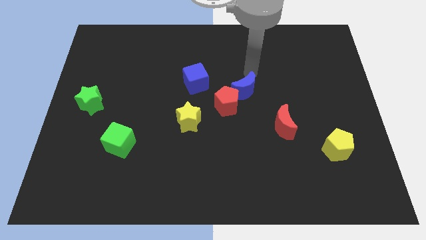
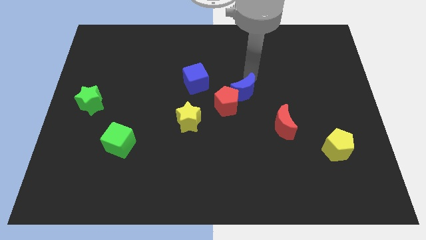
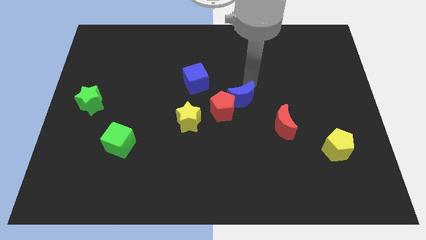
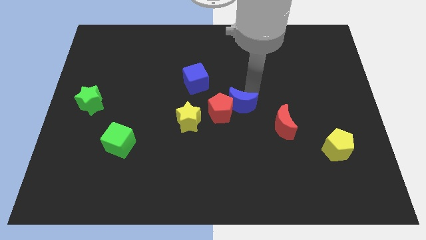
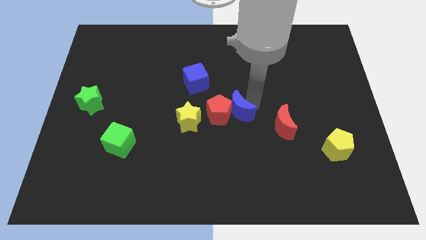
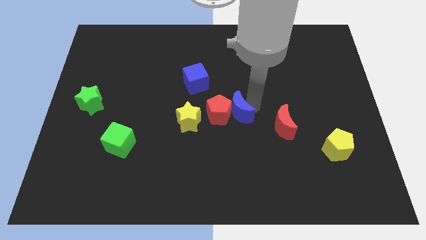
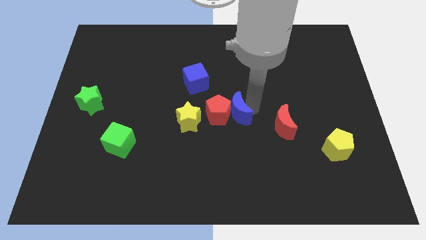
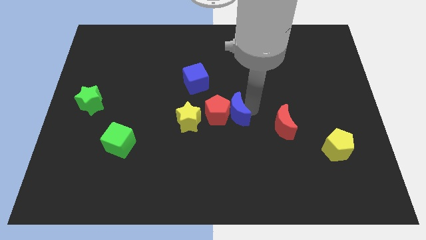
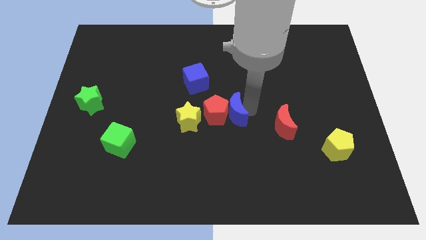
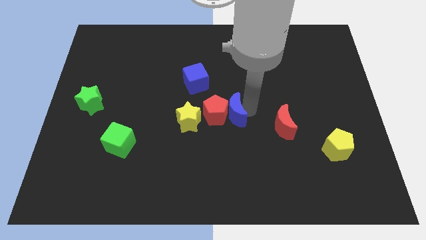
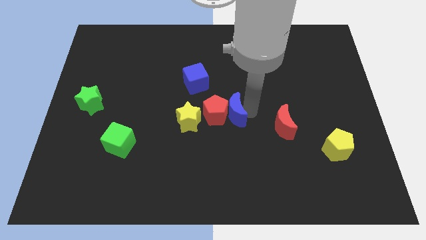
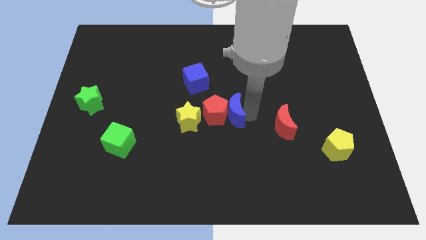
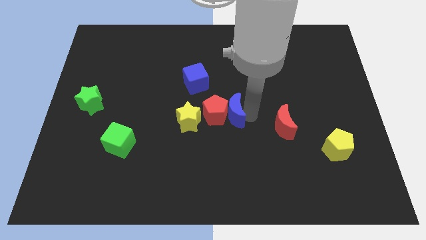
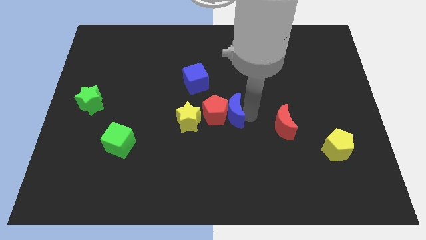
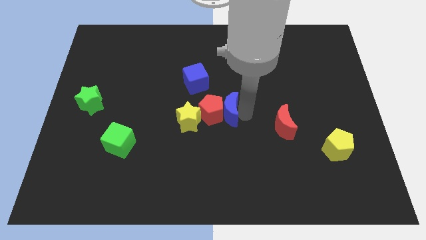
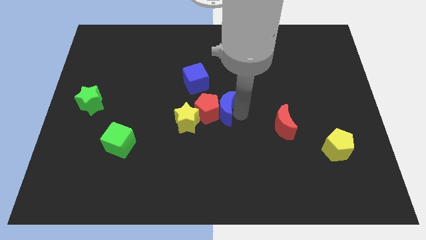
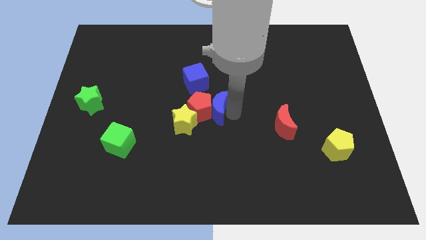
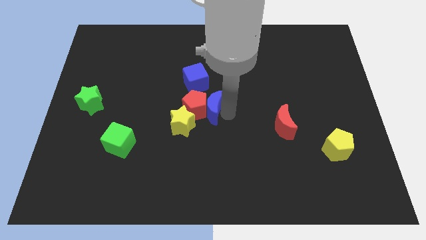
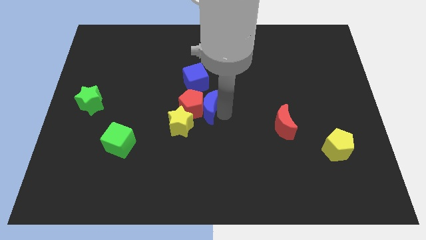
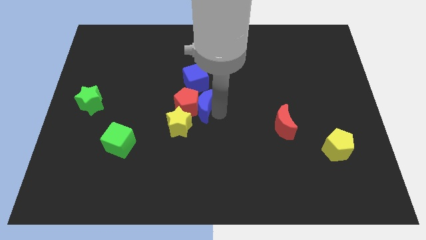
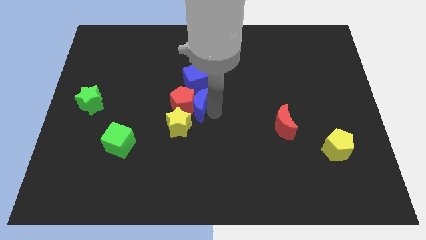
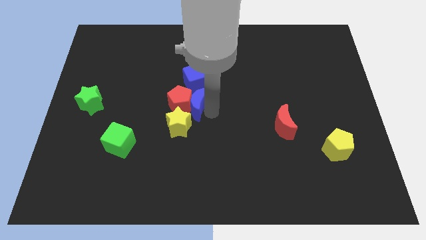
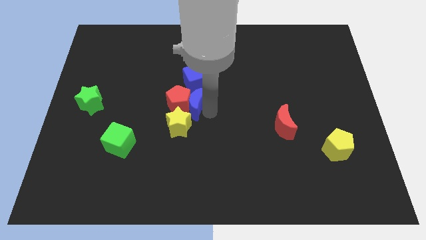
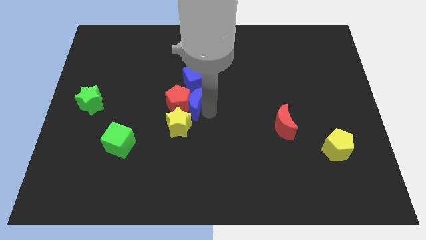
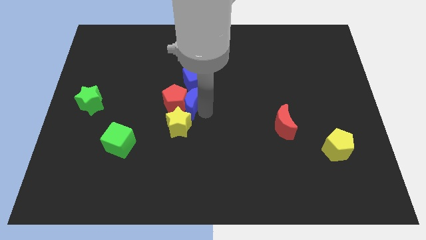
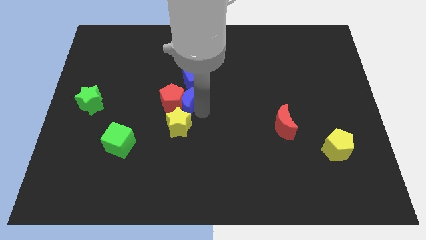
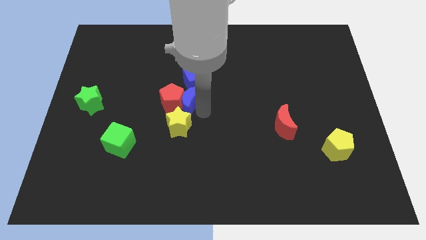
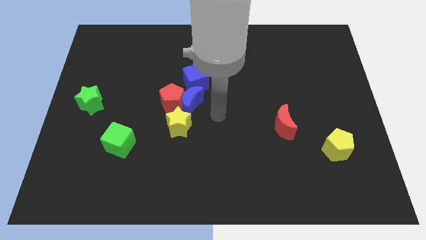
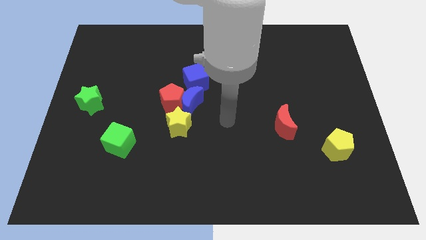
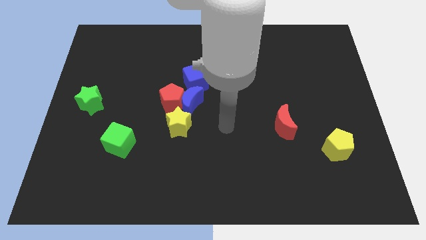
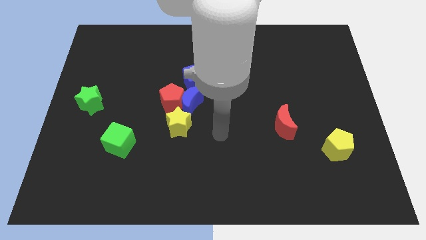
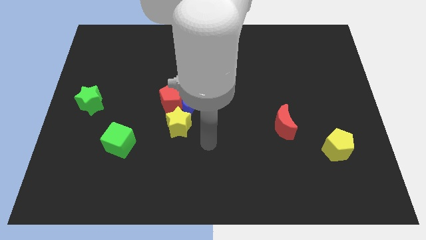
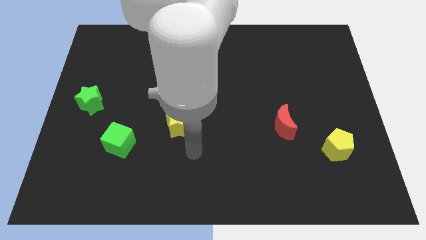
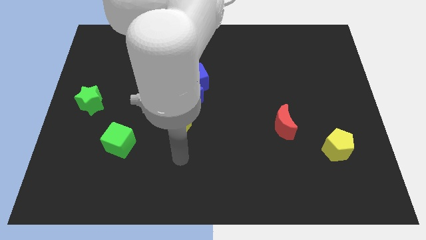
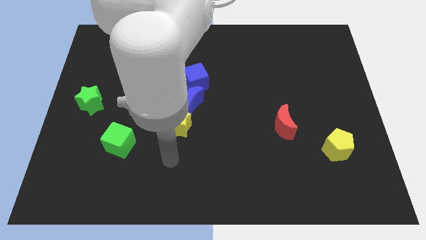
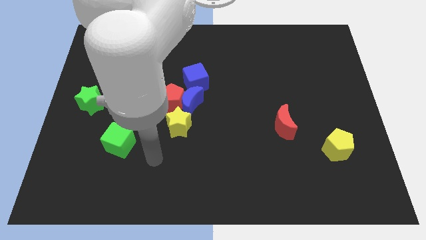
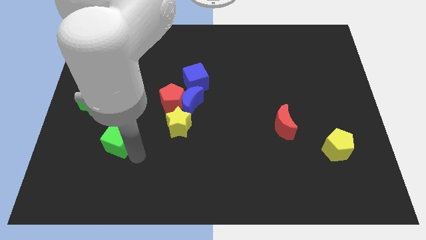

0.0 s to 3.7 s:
place the blue crescent and the red pentagon in between the blue cube and the yellow star

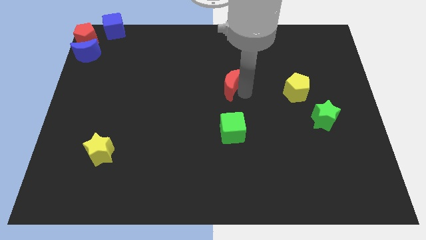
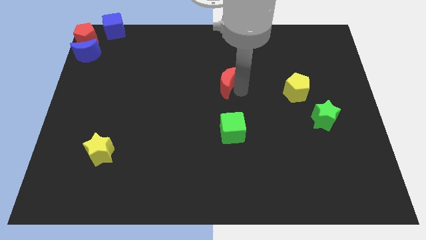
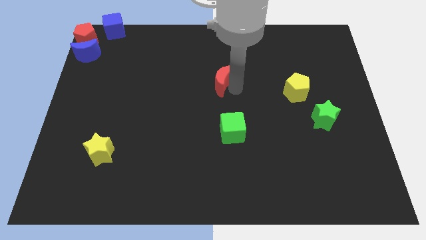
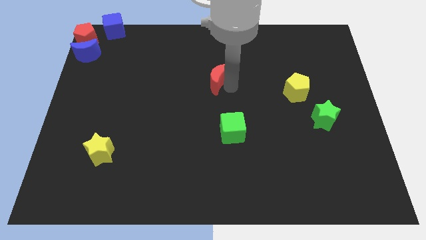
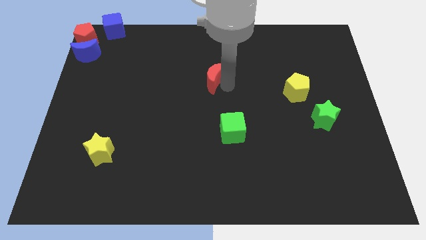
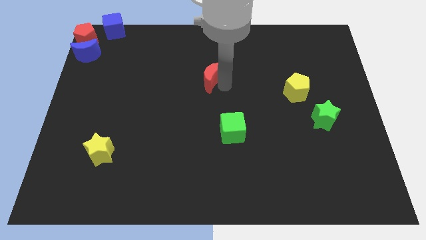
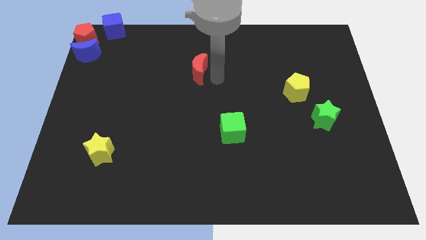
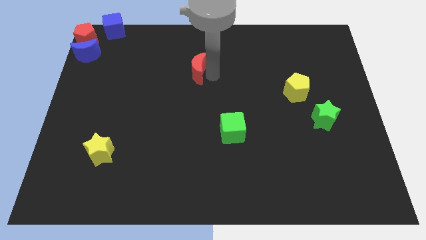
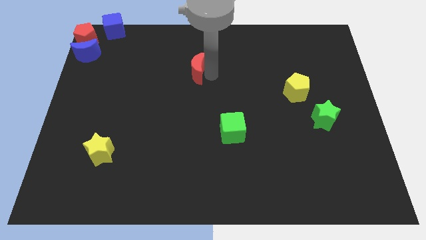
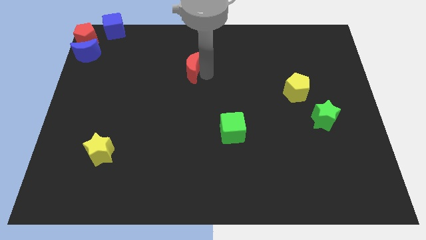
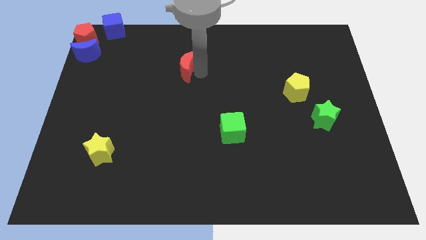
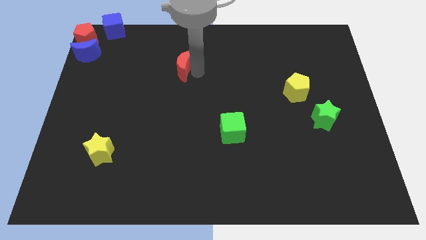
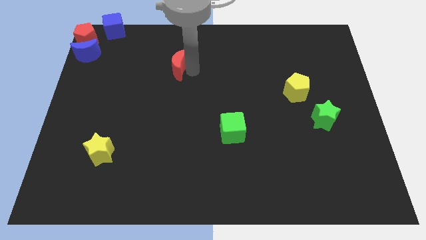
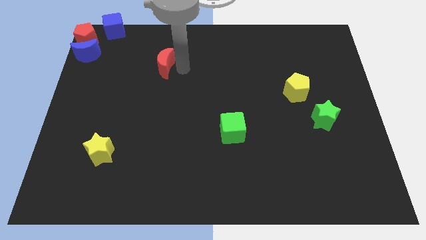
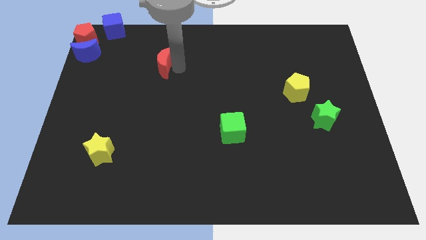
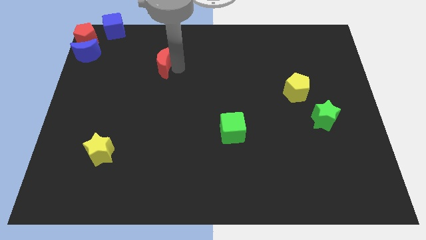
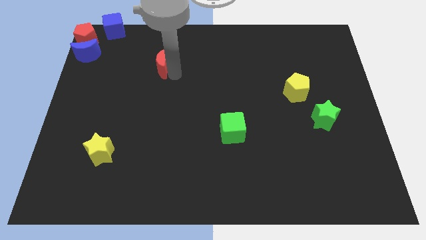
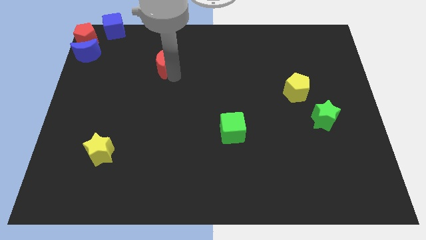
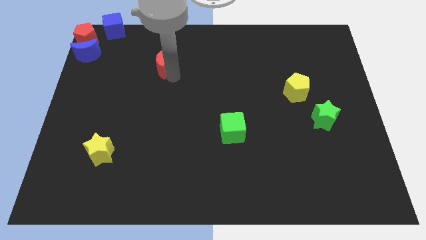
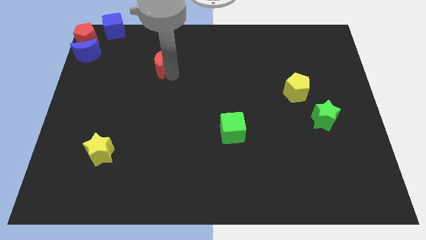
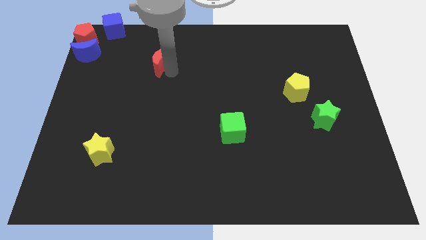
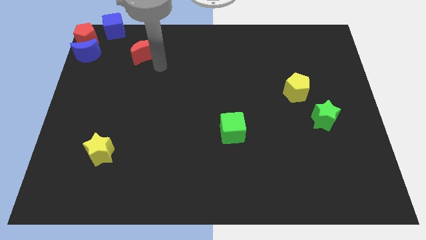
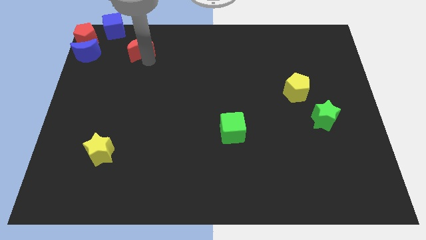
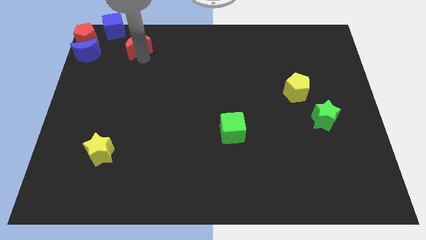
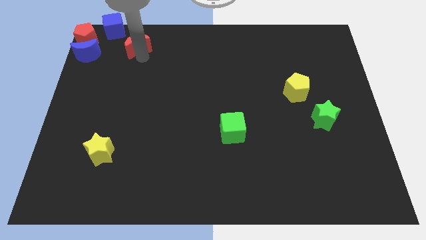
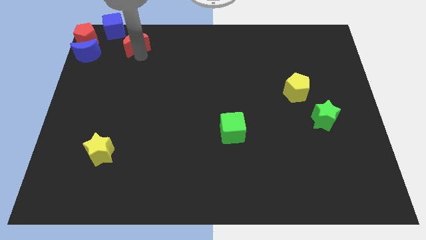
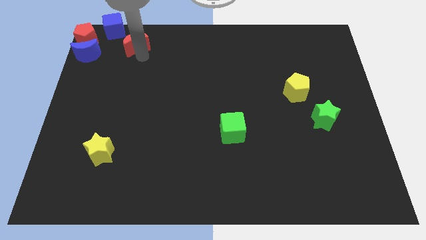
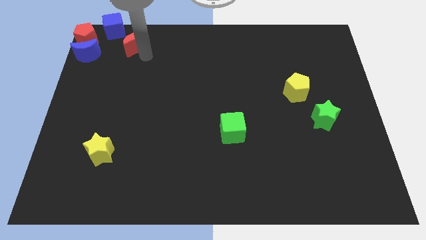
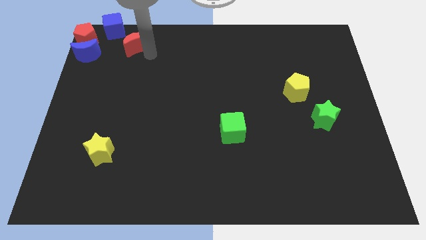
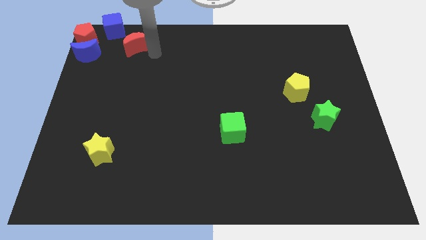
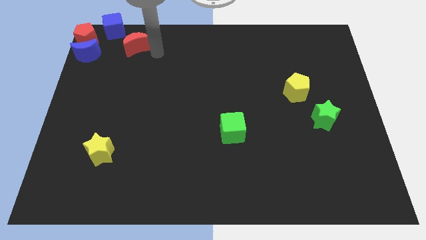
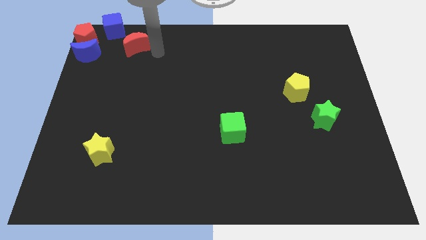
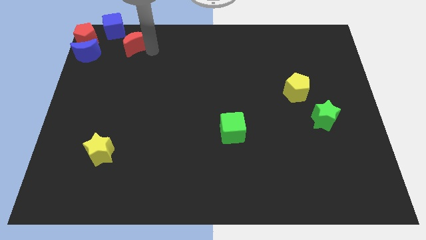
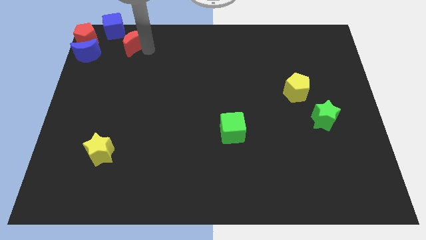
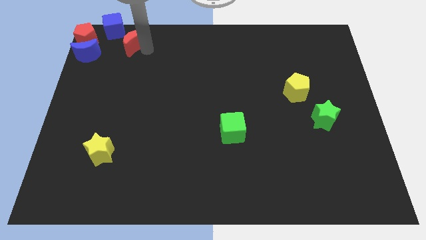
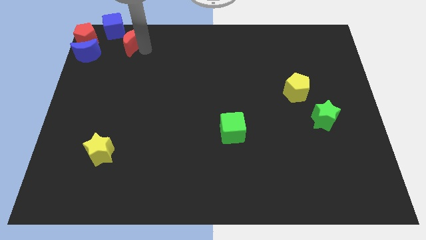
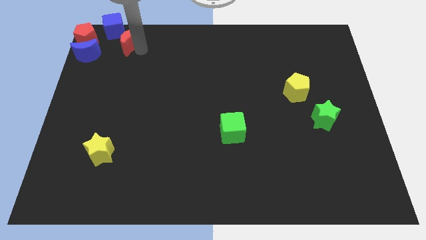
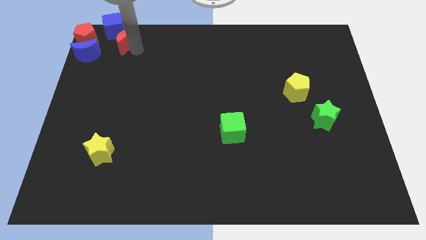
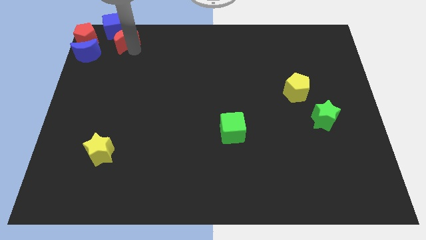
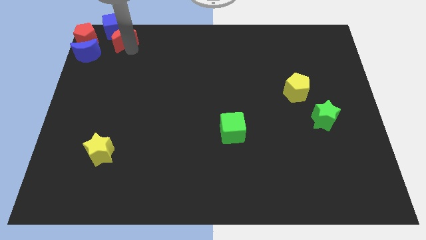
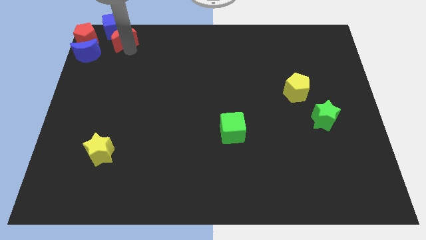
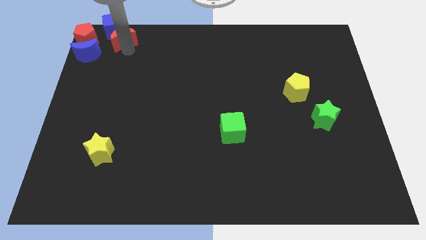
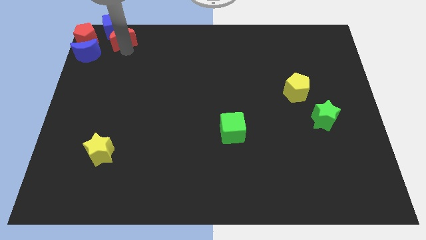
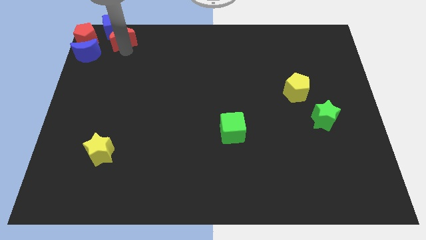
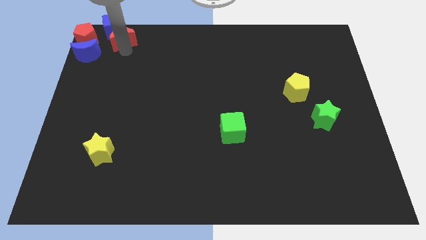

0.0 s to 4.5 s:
move the red crescent close to the bottom side of the blue cube

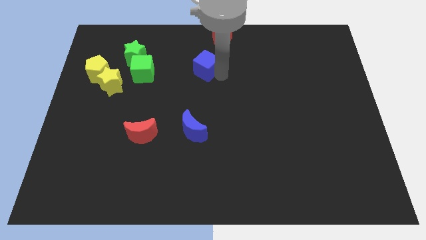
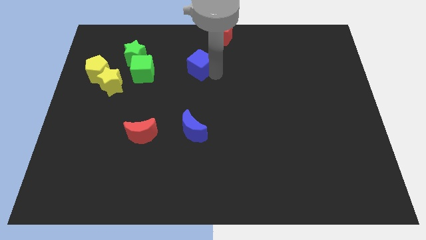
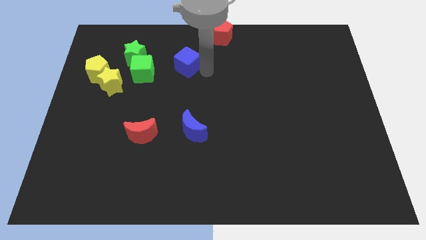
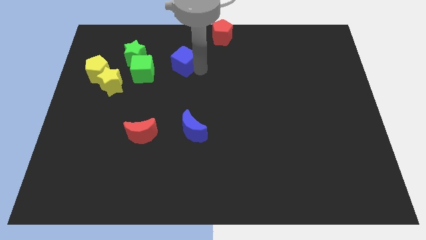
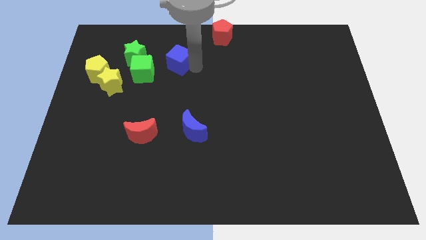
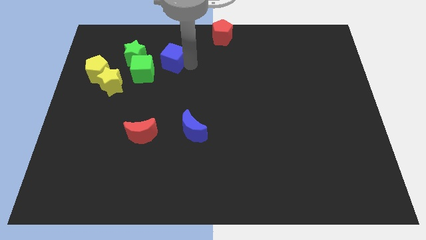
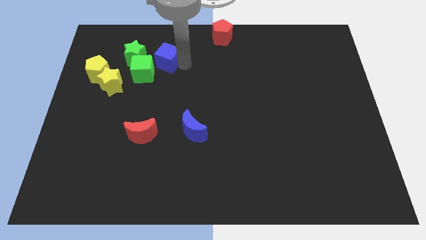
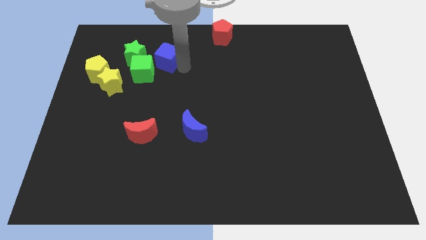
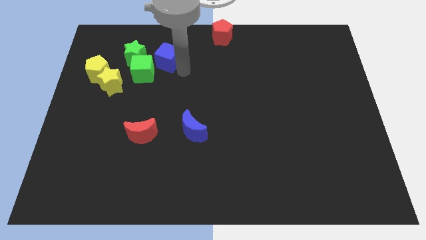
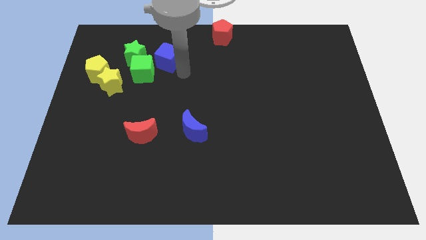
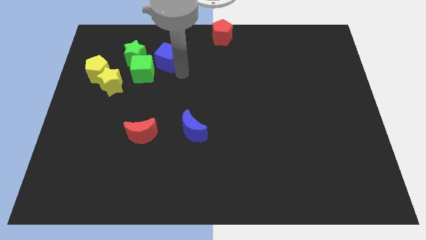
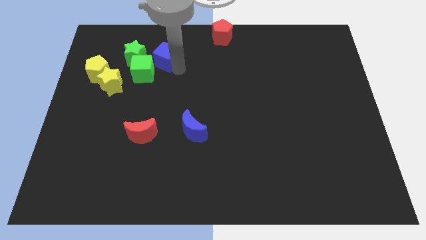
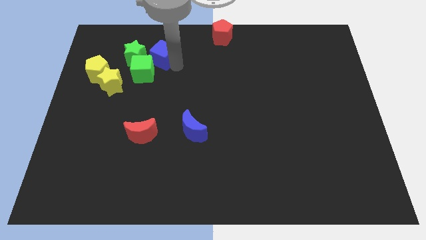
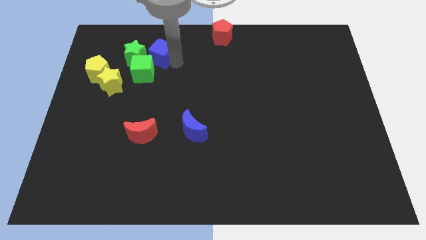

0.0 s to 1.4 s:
push blue cube towards the green star
